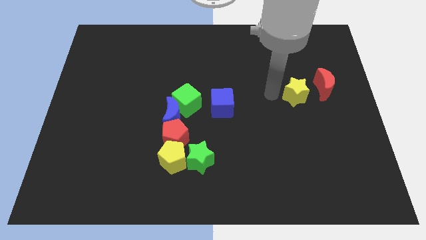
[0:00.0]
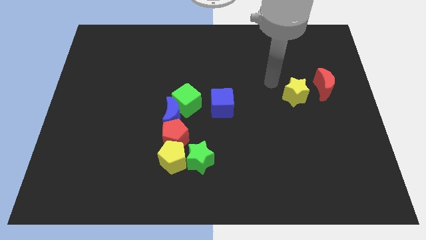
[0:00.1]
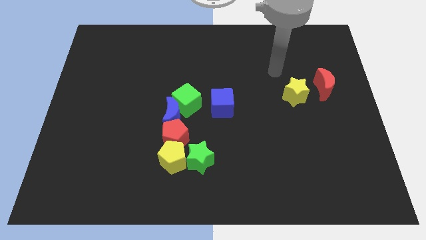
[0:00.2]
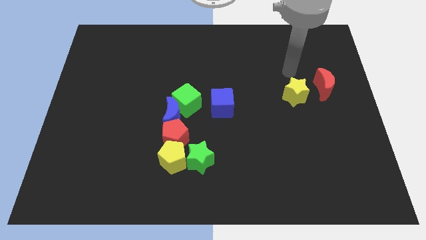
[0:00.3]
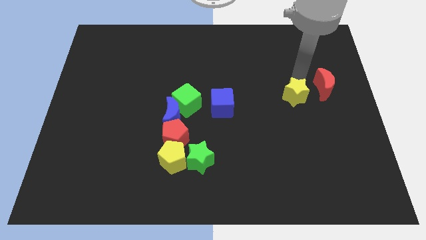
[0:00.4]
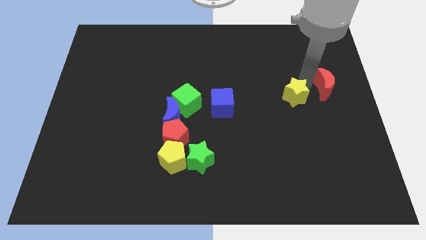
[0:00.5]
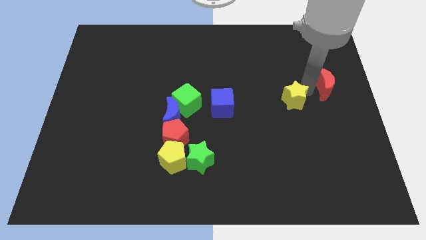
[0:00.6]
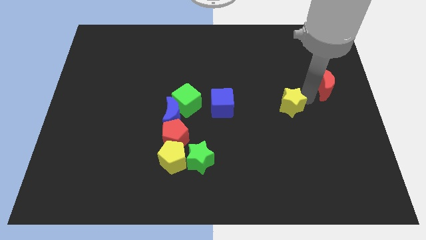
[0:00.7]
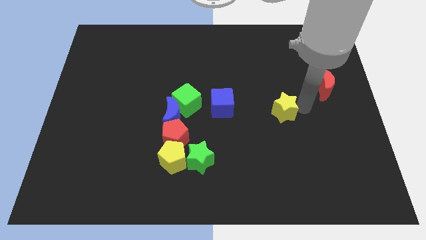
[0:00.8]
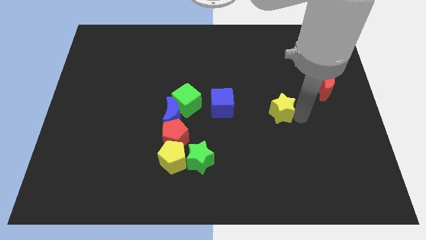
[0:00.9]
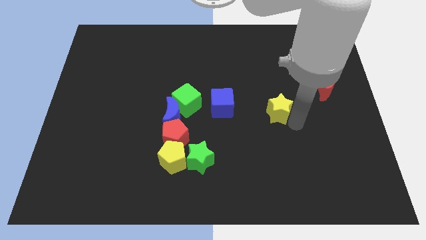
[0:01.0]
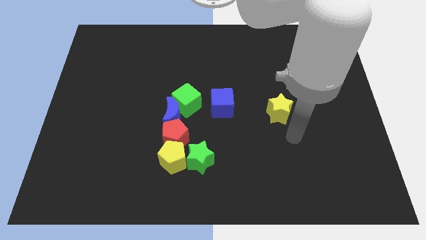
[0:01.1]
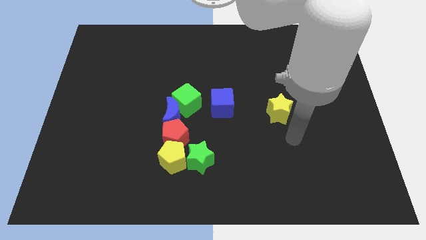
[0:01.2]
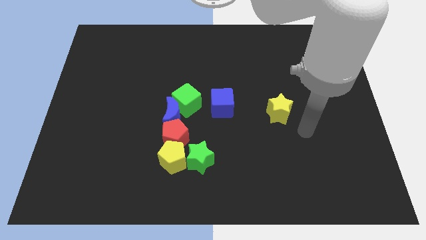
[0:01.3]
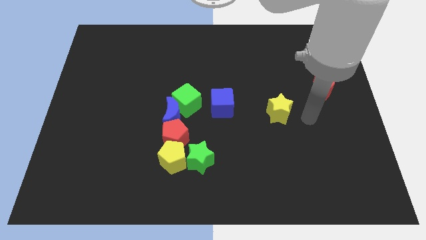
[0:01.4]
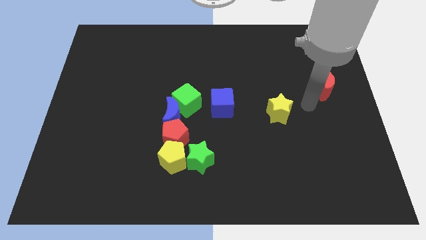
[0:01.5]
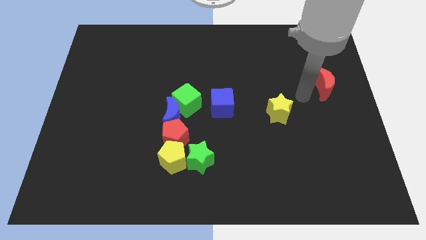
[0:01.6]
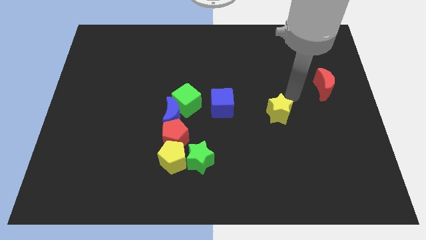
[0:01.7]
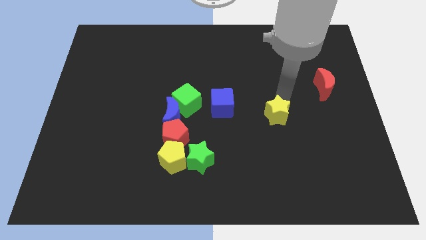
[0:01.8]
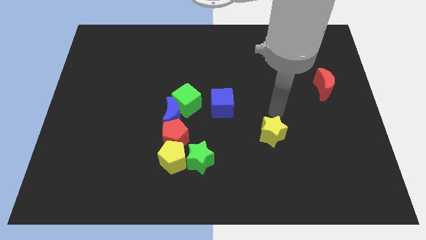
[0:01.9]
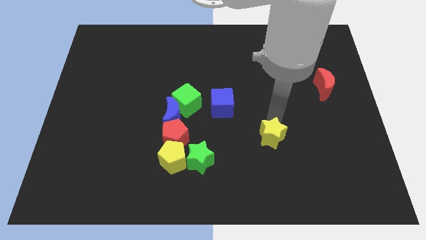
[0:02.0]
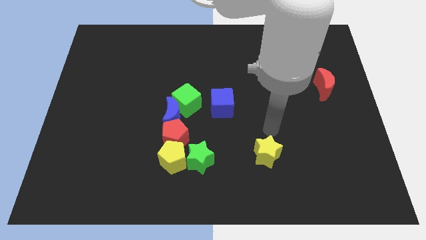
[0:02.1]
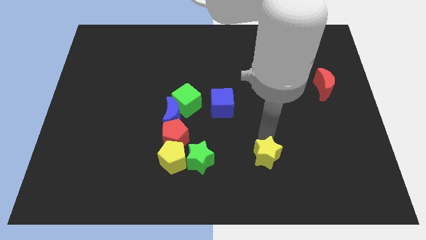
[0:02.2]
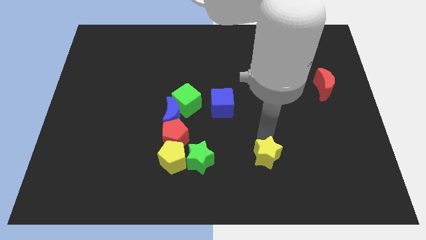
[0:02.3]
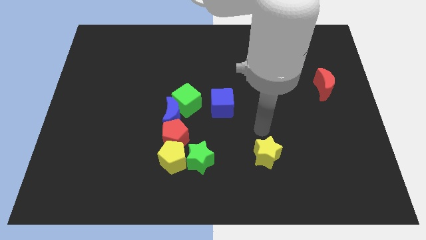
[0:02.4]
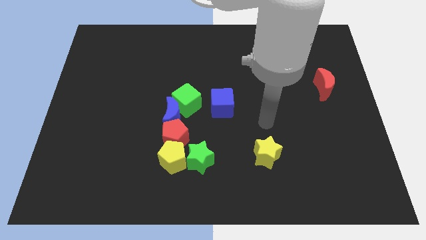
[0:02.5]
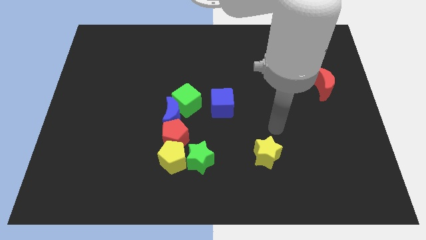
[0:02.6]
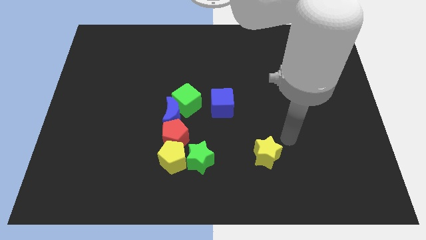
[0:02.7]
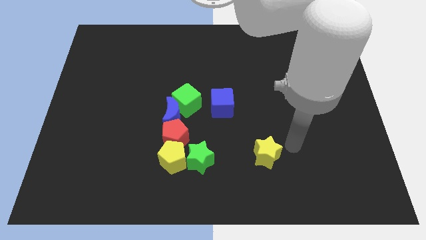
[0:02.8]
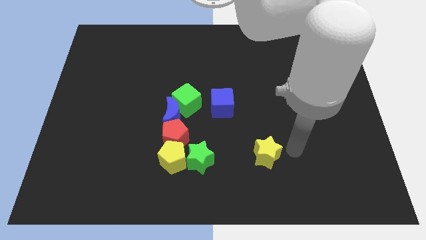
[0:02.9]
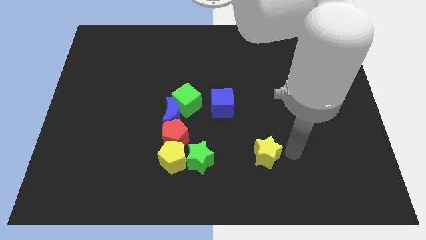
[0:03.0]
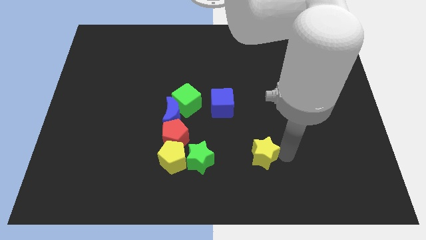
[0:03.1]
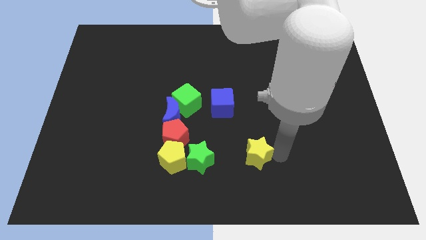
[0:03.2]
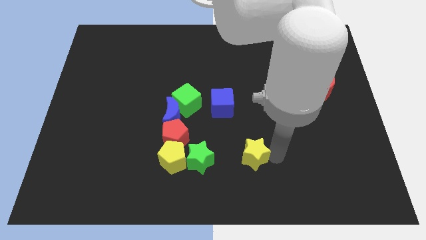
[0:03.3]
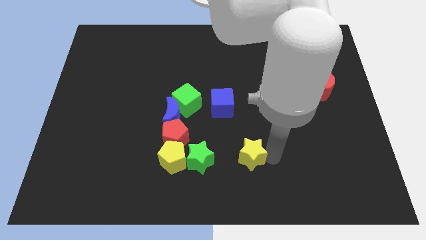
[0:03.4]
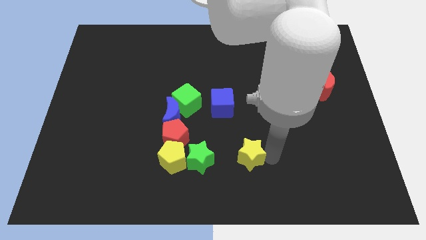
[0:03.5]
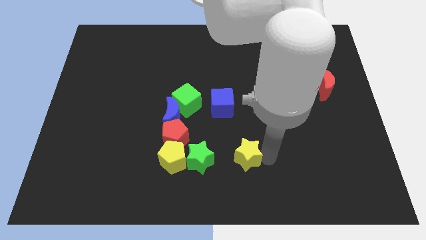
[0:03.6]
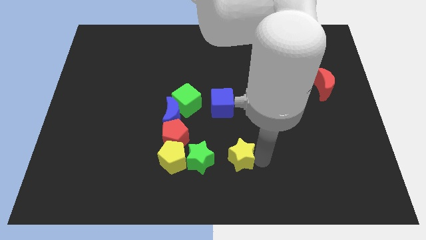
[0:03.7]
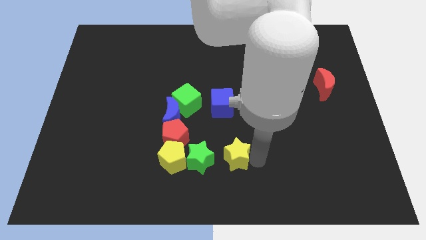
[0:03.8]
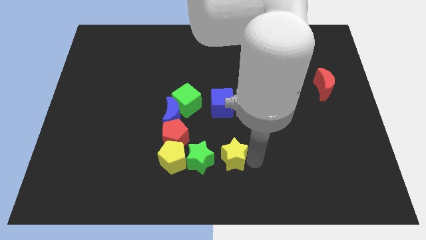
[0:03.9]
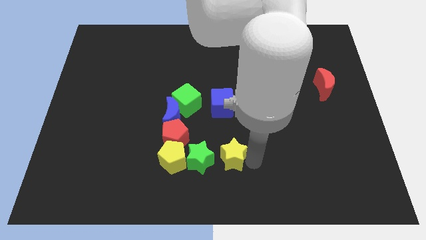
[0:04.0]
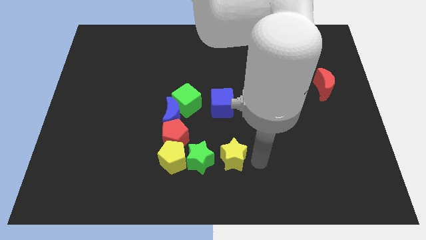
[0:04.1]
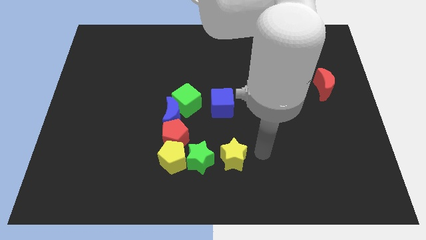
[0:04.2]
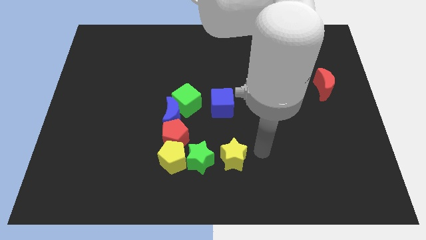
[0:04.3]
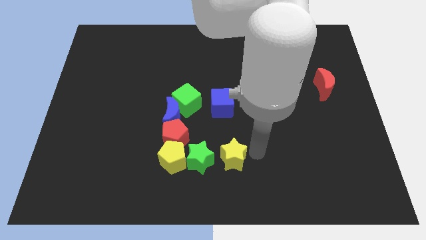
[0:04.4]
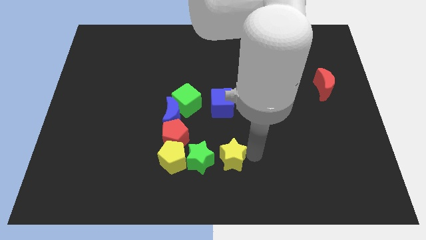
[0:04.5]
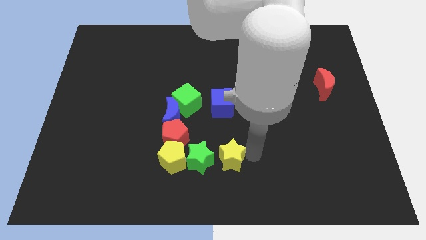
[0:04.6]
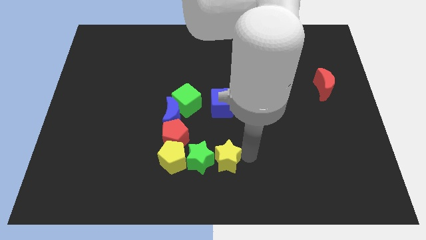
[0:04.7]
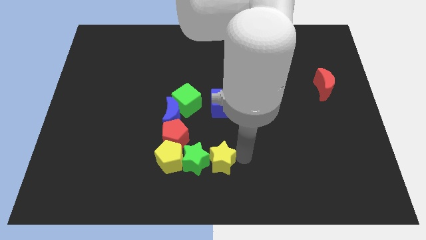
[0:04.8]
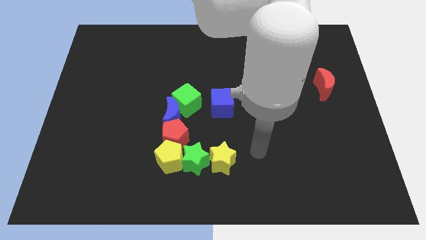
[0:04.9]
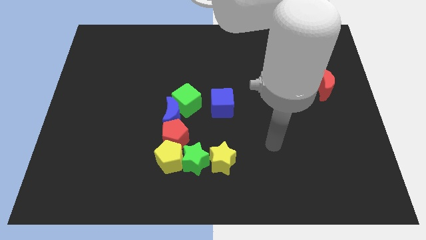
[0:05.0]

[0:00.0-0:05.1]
place yellow star below the blue cube

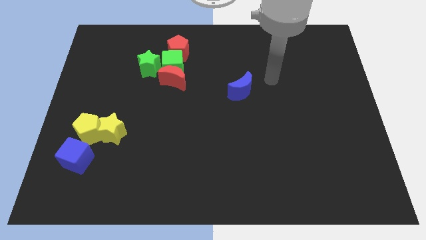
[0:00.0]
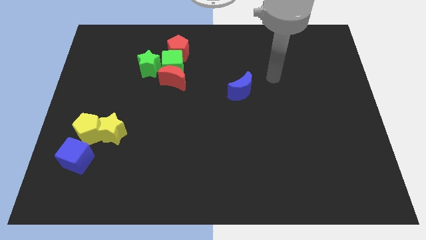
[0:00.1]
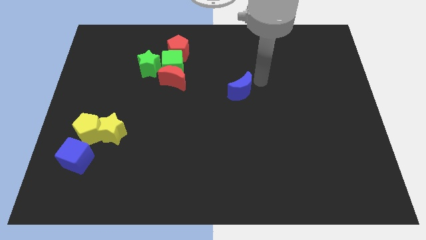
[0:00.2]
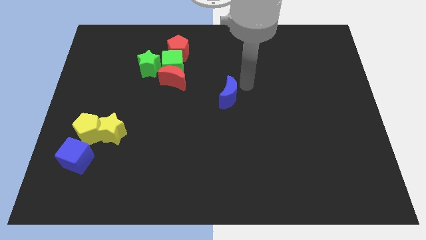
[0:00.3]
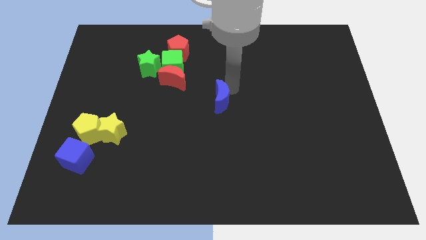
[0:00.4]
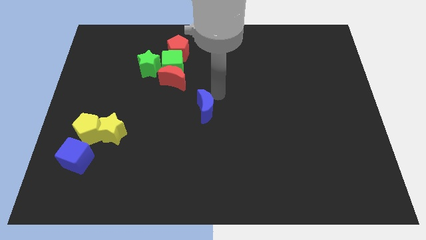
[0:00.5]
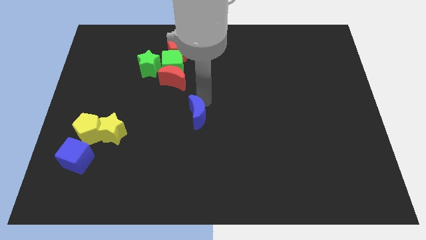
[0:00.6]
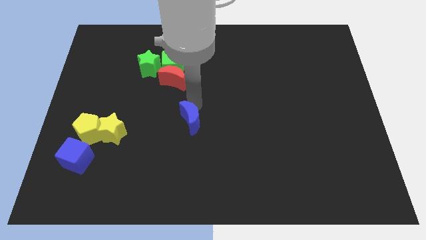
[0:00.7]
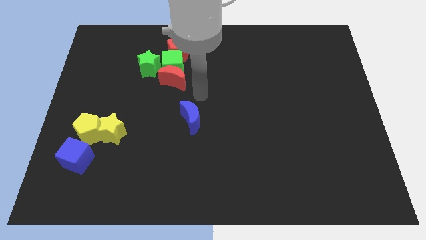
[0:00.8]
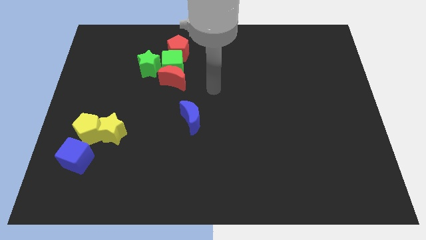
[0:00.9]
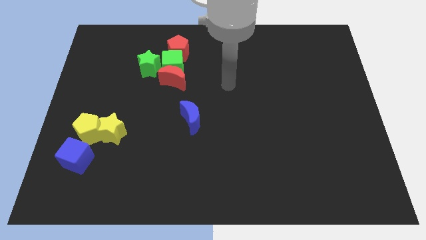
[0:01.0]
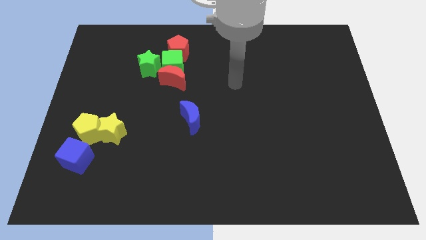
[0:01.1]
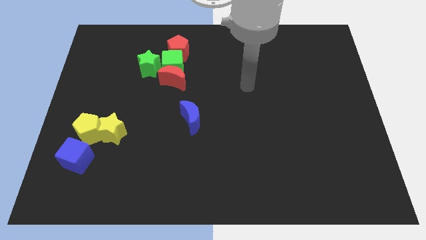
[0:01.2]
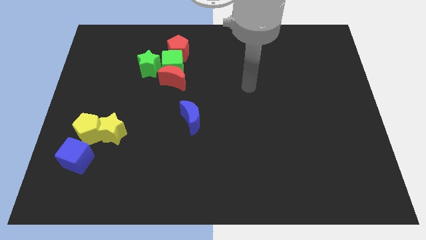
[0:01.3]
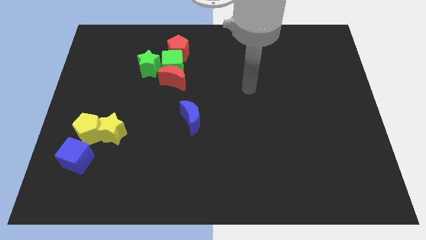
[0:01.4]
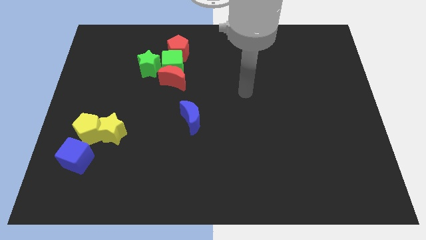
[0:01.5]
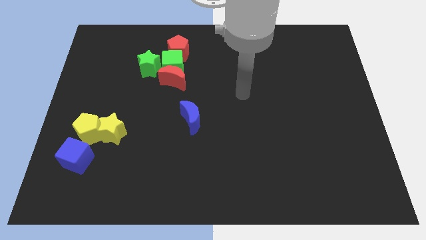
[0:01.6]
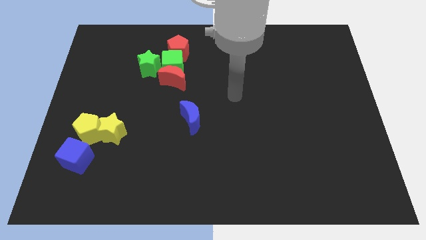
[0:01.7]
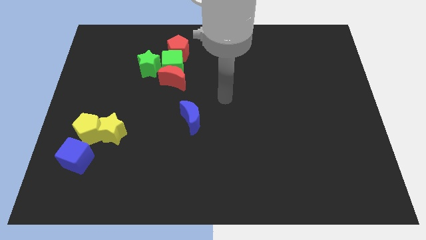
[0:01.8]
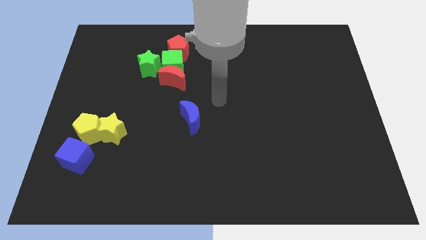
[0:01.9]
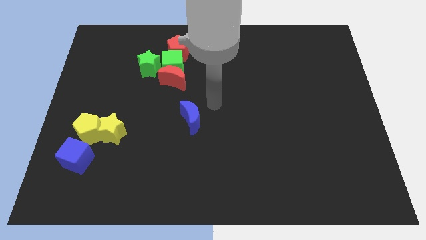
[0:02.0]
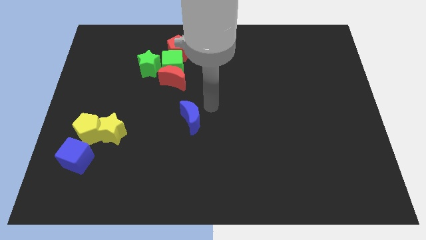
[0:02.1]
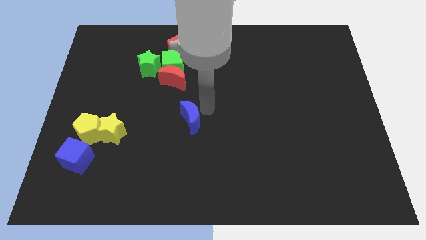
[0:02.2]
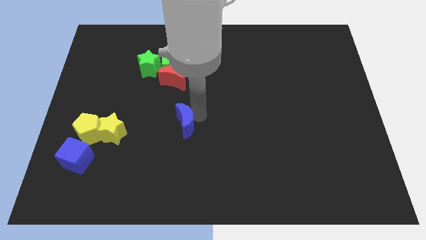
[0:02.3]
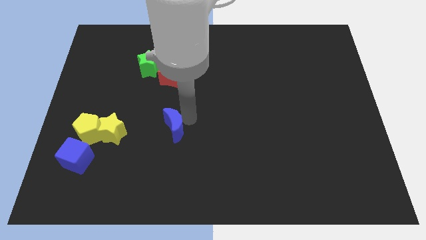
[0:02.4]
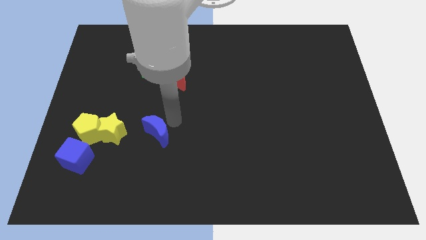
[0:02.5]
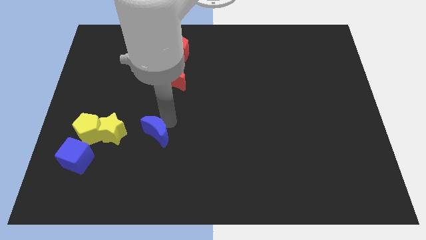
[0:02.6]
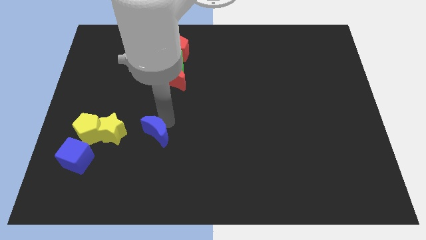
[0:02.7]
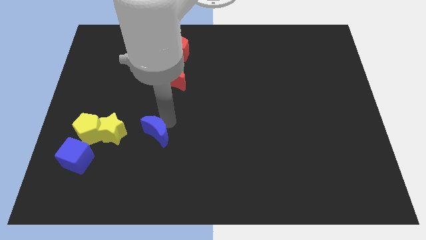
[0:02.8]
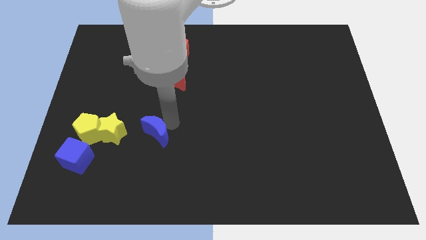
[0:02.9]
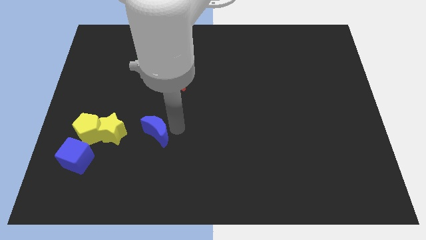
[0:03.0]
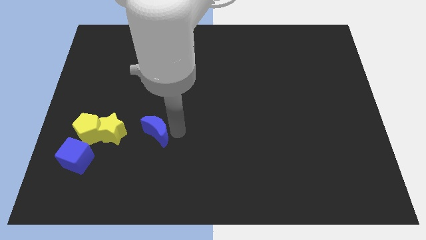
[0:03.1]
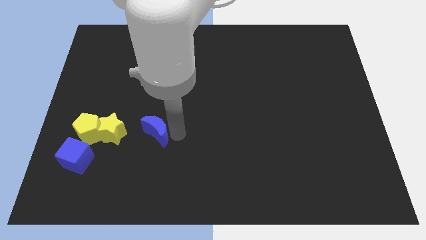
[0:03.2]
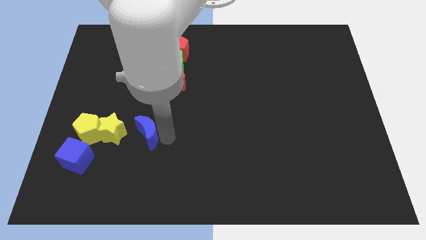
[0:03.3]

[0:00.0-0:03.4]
move the blue crescent to the right side of the yellow star

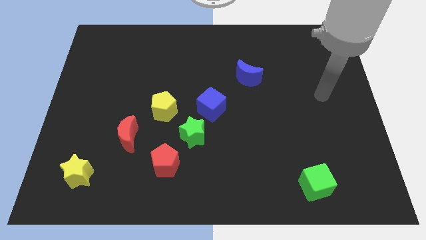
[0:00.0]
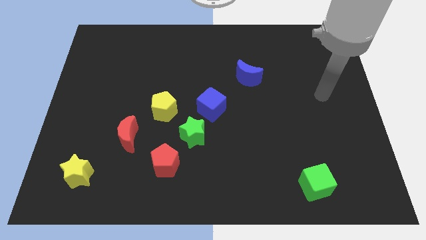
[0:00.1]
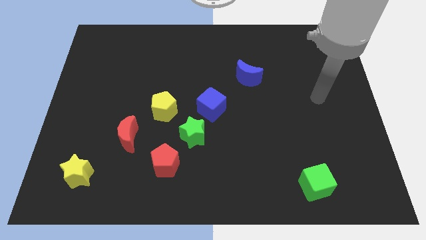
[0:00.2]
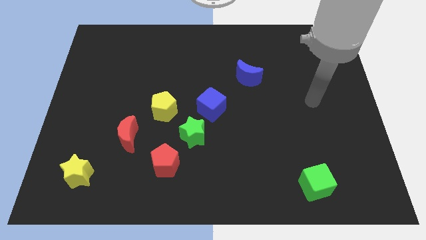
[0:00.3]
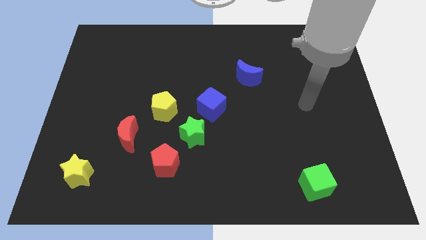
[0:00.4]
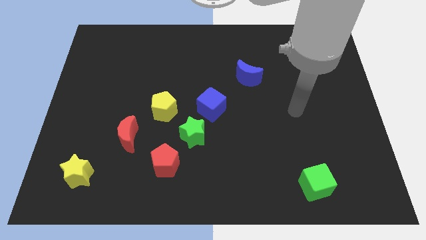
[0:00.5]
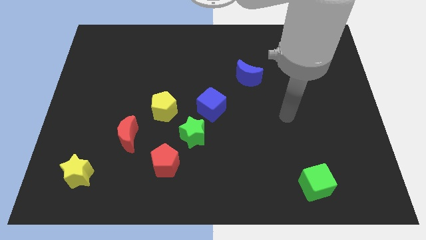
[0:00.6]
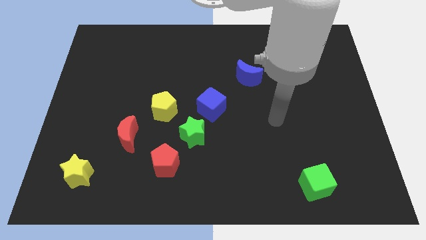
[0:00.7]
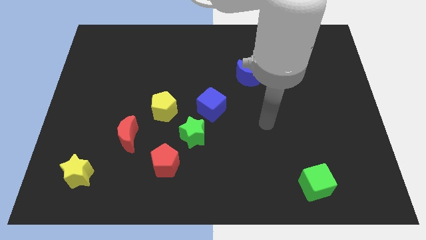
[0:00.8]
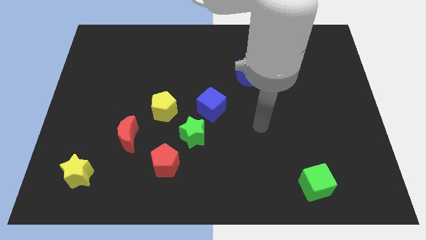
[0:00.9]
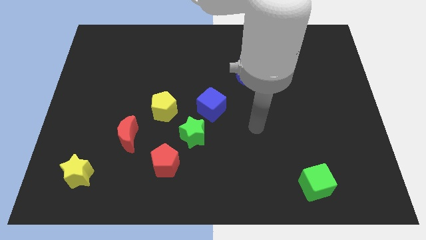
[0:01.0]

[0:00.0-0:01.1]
place your hand below blue crescent
